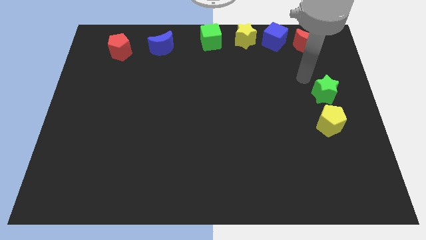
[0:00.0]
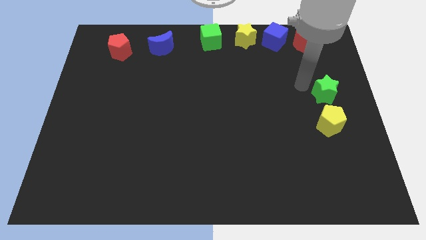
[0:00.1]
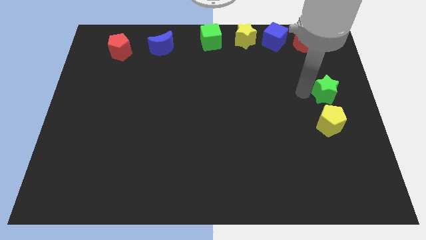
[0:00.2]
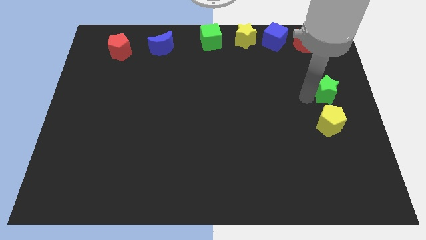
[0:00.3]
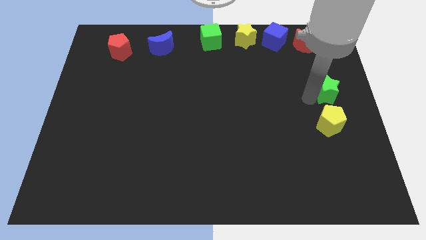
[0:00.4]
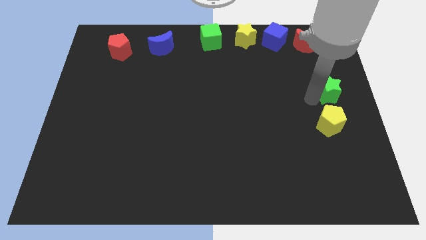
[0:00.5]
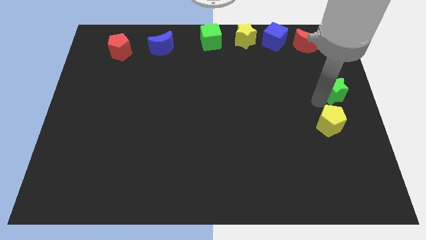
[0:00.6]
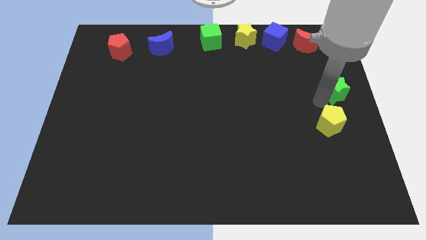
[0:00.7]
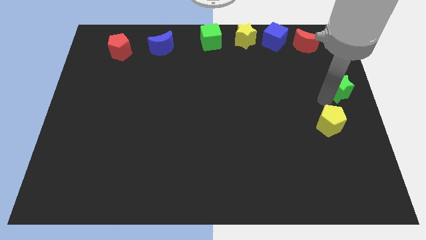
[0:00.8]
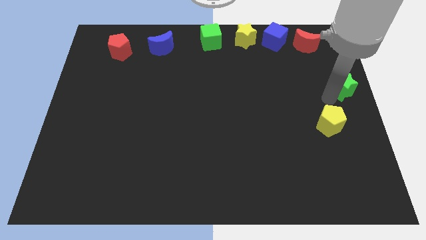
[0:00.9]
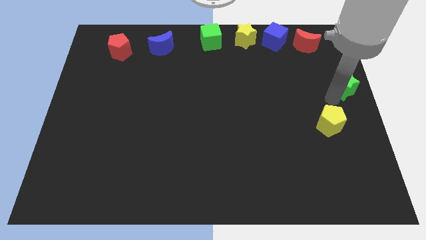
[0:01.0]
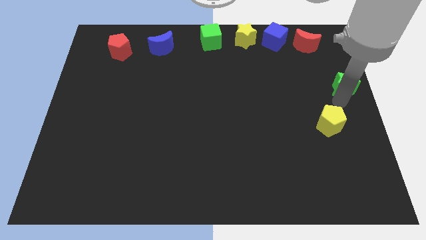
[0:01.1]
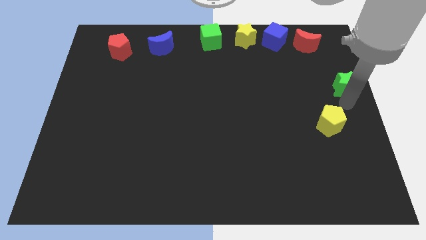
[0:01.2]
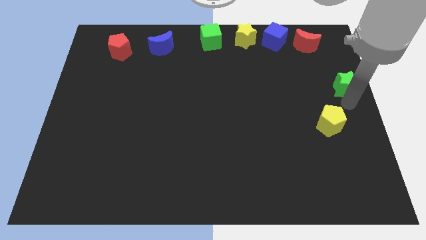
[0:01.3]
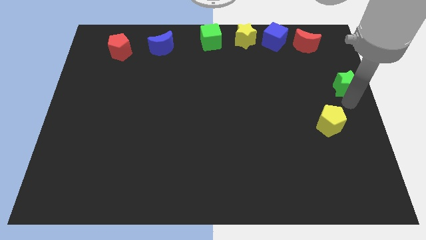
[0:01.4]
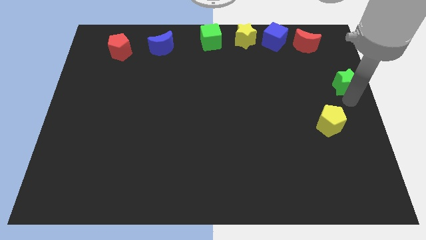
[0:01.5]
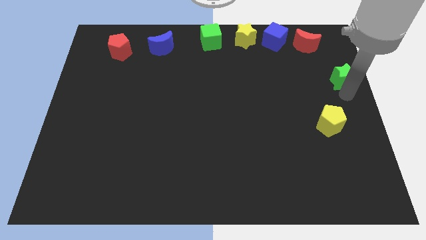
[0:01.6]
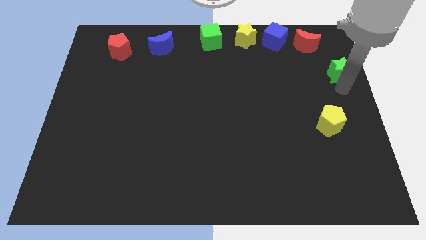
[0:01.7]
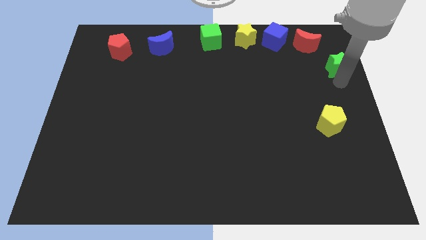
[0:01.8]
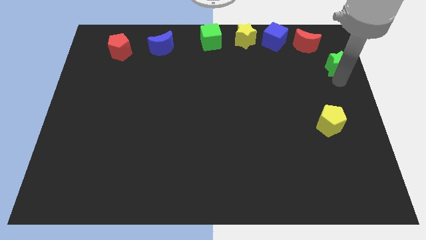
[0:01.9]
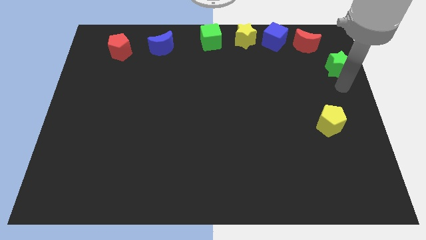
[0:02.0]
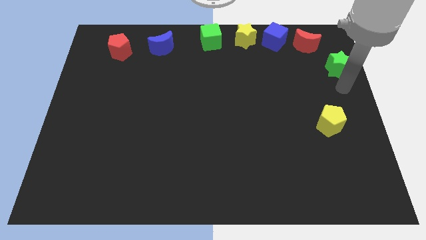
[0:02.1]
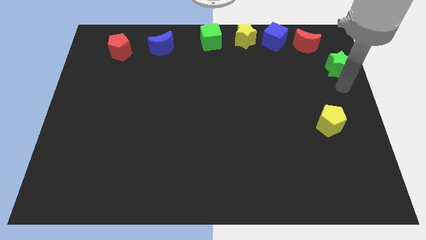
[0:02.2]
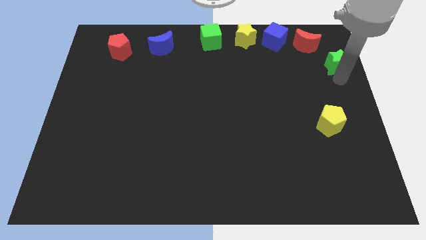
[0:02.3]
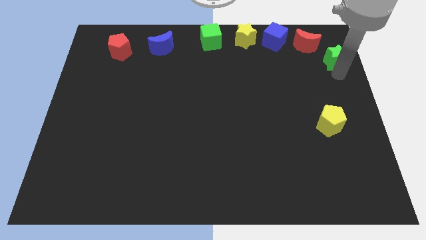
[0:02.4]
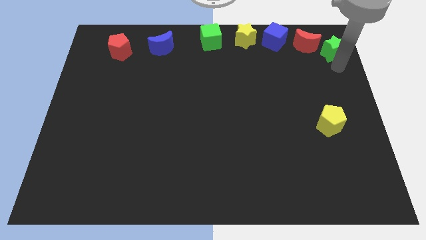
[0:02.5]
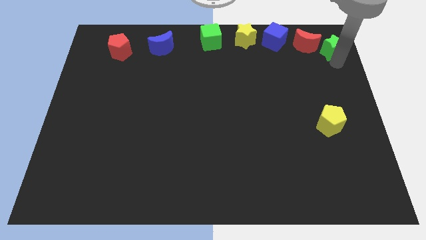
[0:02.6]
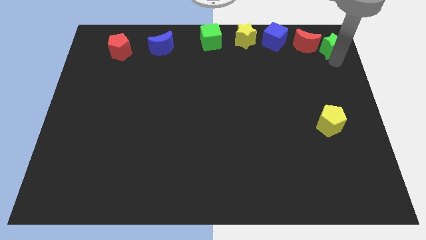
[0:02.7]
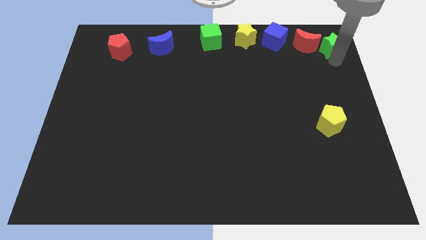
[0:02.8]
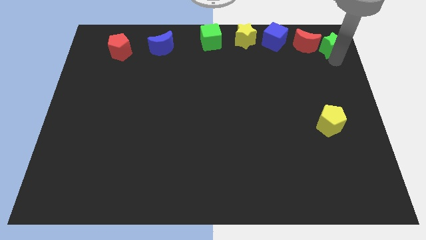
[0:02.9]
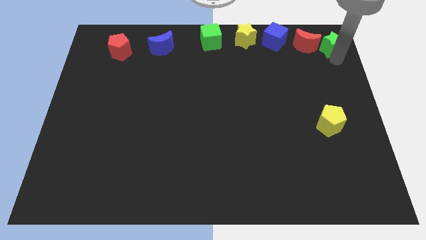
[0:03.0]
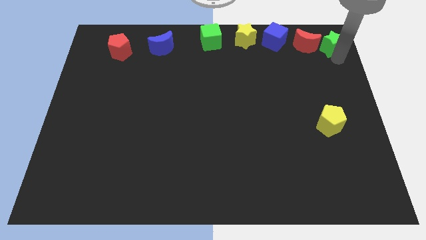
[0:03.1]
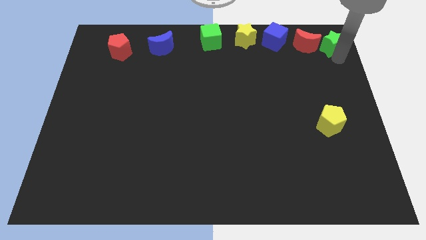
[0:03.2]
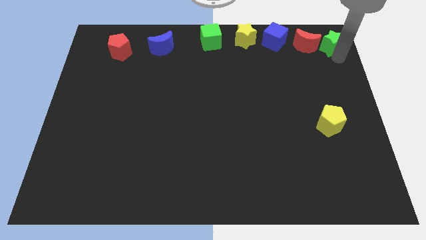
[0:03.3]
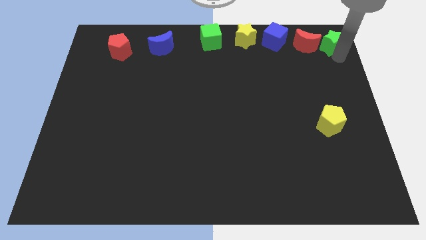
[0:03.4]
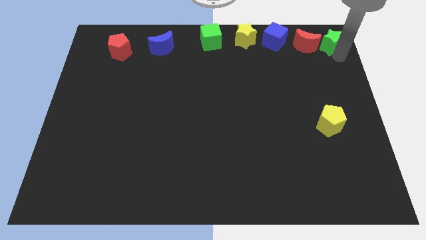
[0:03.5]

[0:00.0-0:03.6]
place the green star adjacent to the red crescent

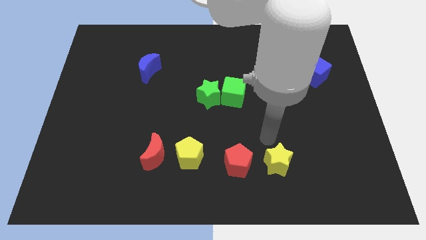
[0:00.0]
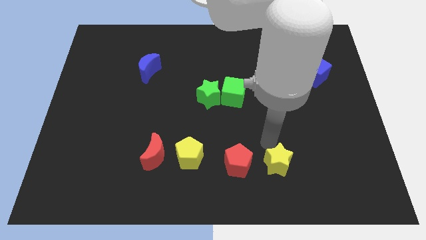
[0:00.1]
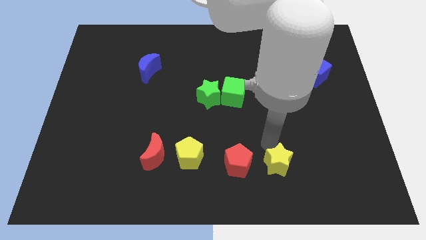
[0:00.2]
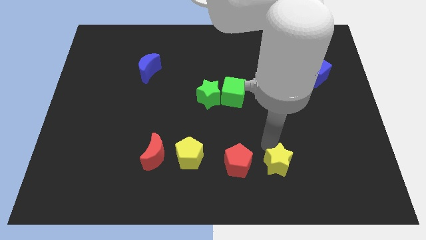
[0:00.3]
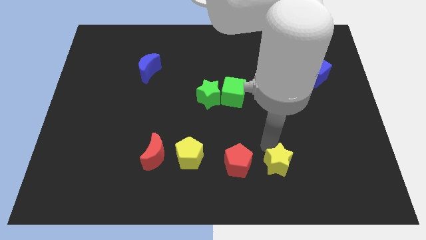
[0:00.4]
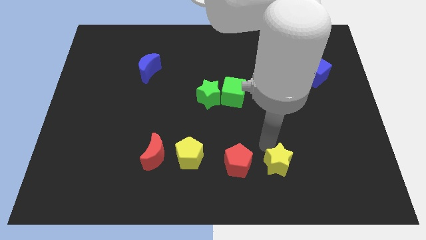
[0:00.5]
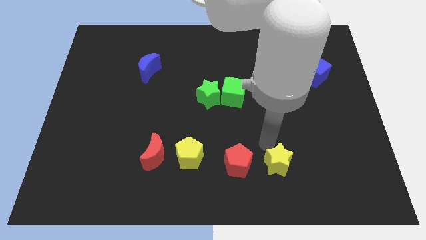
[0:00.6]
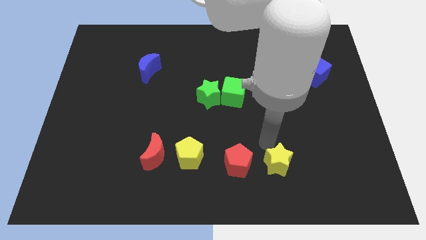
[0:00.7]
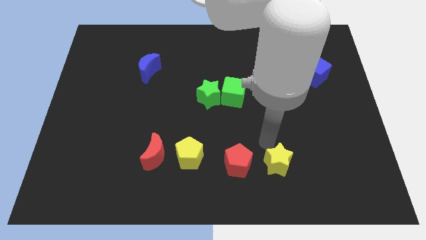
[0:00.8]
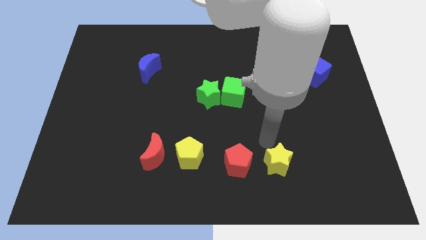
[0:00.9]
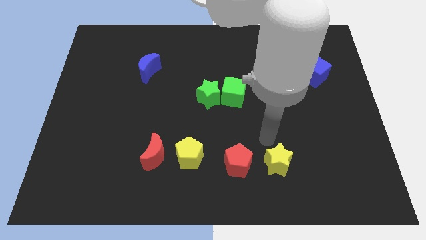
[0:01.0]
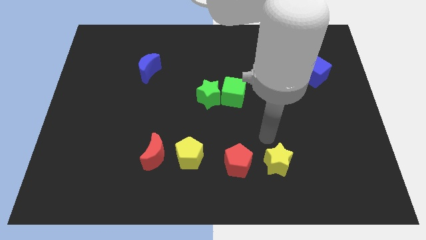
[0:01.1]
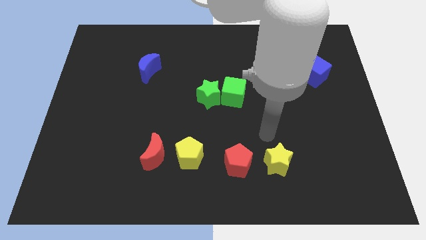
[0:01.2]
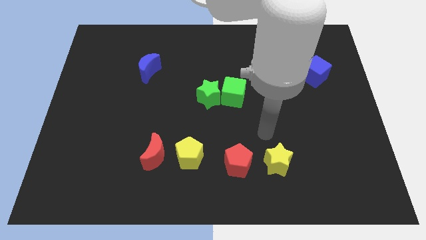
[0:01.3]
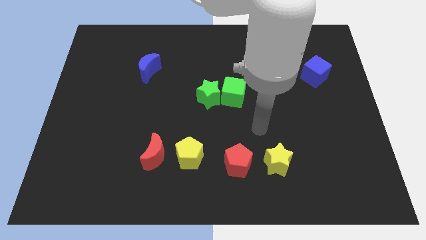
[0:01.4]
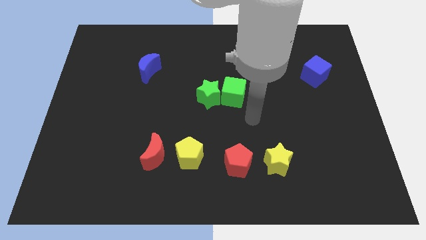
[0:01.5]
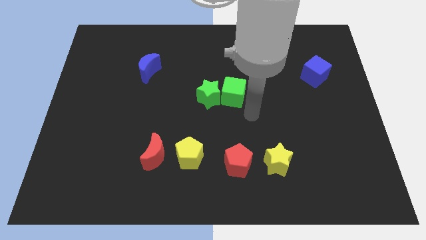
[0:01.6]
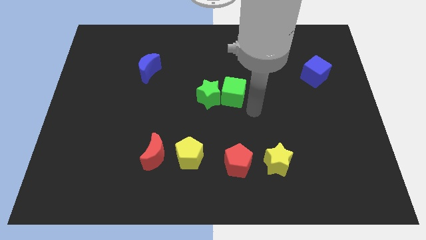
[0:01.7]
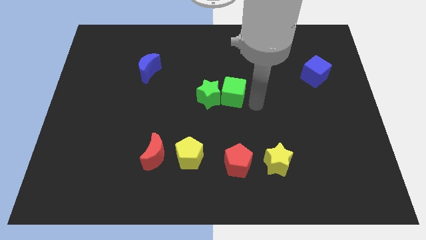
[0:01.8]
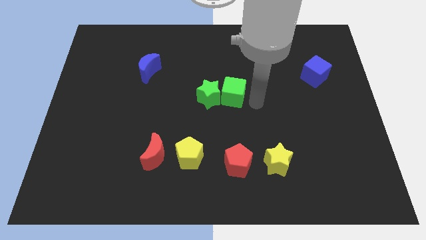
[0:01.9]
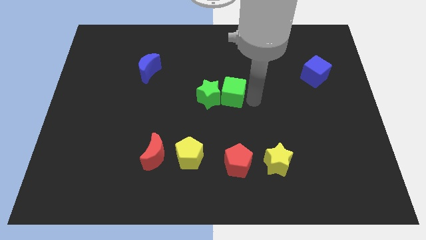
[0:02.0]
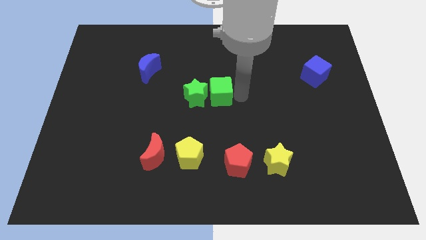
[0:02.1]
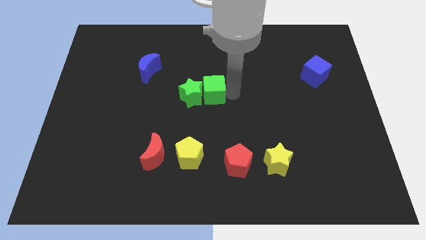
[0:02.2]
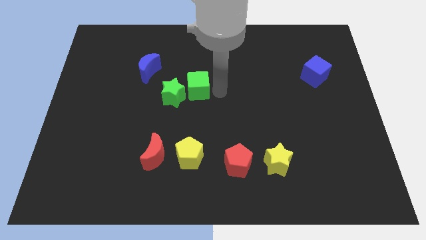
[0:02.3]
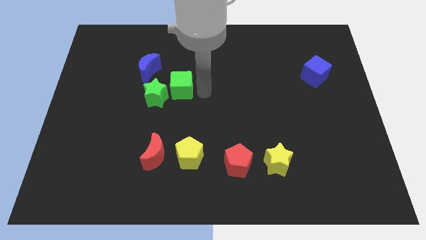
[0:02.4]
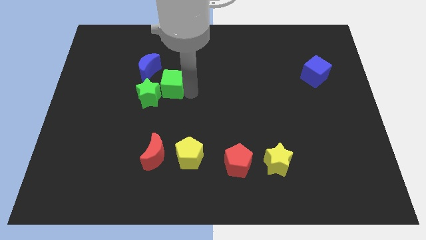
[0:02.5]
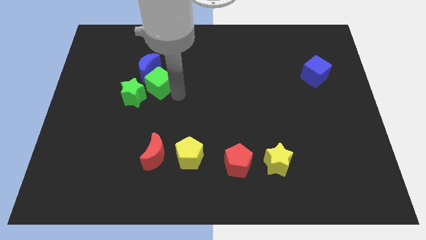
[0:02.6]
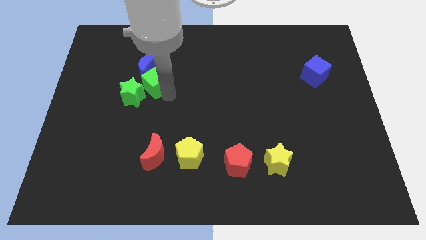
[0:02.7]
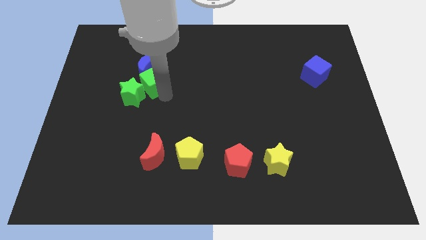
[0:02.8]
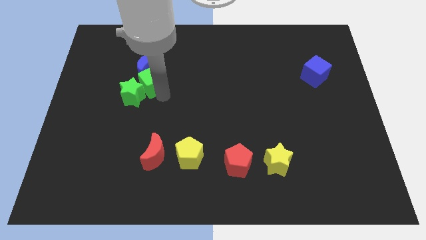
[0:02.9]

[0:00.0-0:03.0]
push the green blocks towards the left side

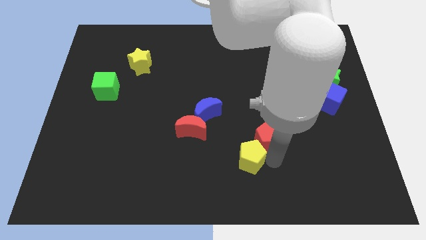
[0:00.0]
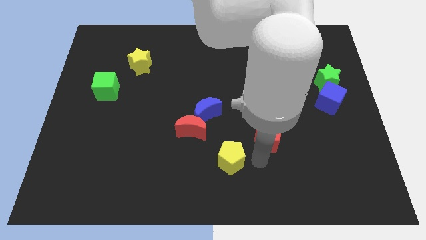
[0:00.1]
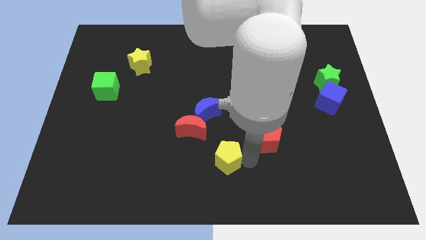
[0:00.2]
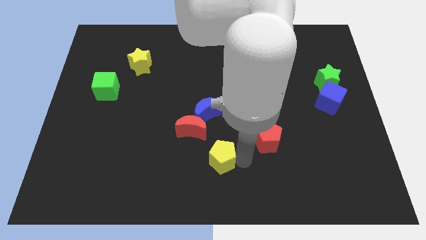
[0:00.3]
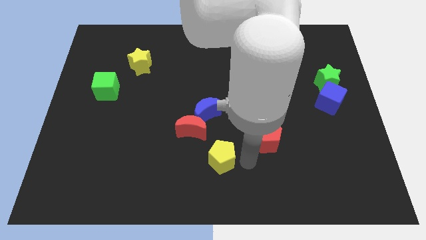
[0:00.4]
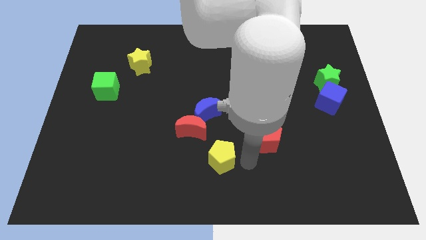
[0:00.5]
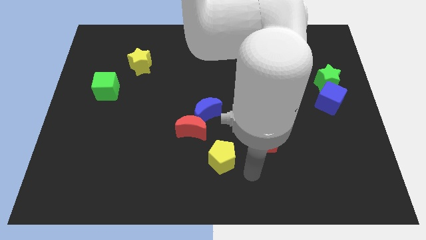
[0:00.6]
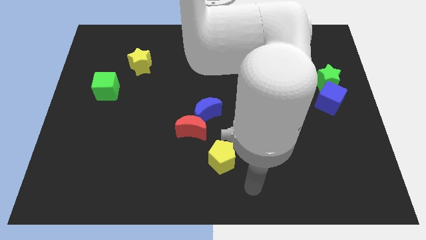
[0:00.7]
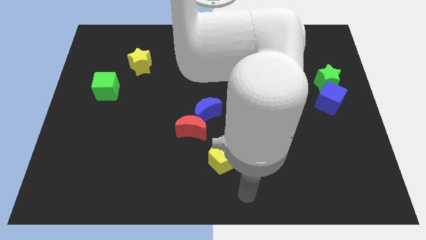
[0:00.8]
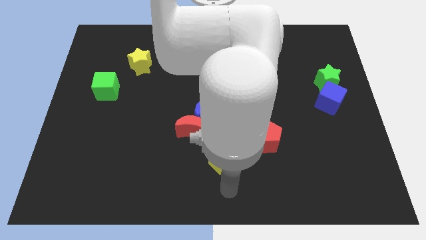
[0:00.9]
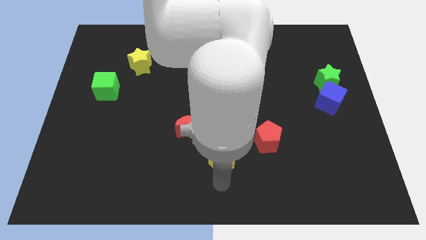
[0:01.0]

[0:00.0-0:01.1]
move the yellow pentagon away from the red pentagon

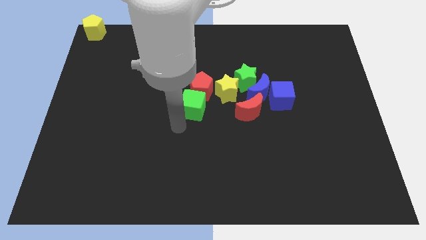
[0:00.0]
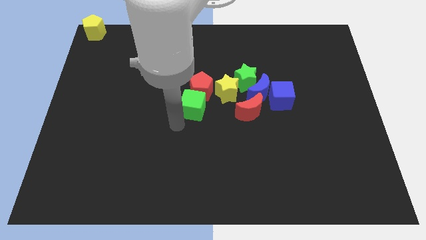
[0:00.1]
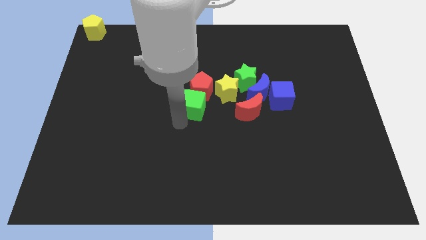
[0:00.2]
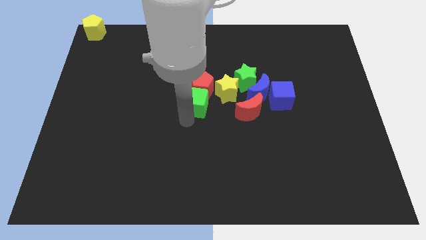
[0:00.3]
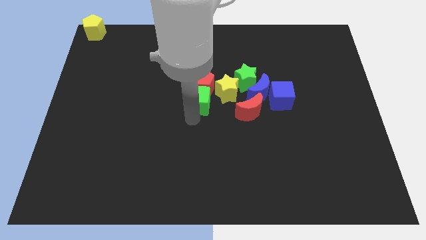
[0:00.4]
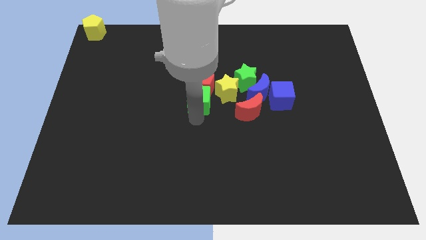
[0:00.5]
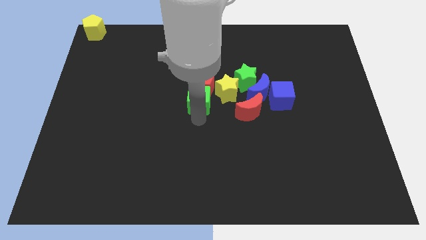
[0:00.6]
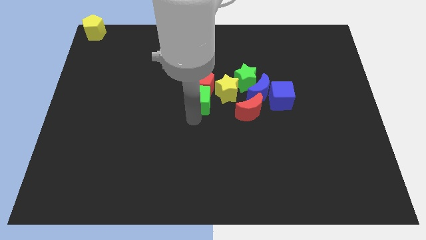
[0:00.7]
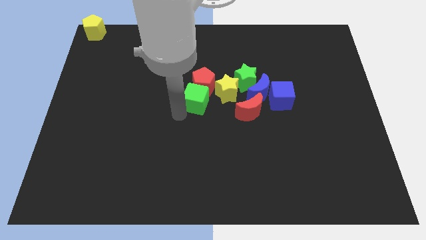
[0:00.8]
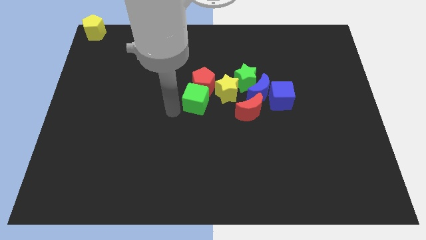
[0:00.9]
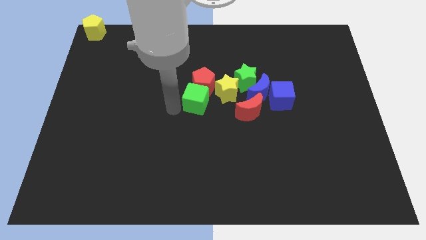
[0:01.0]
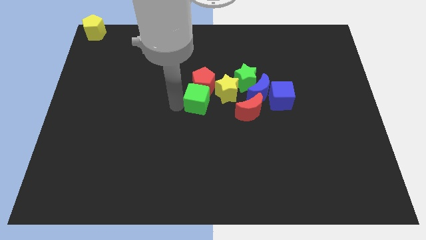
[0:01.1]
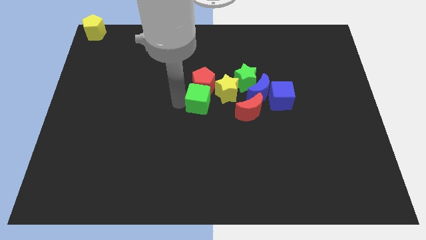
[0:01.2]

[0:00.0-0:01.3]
push the green cube into the reed pentagon
